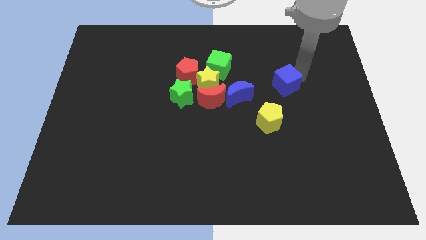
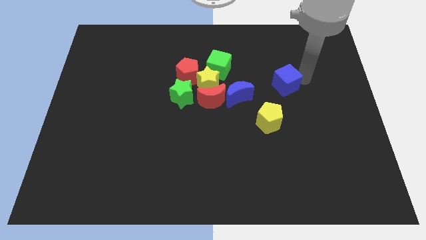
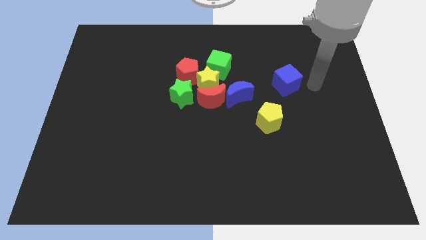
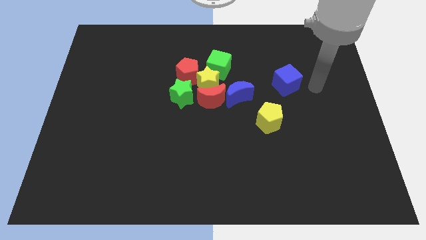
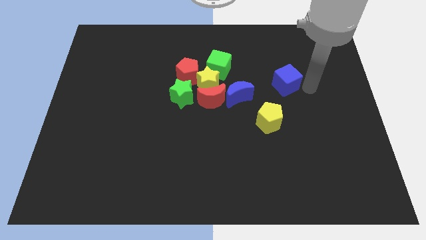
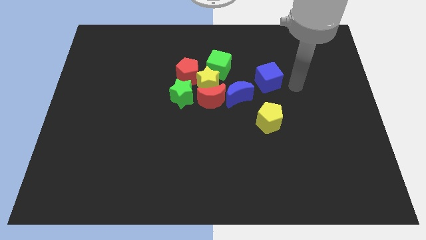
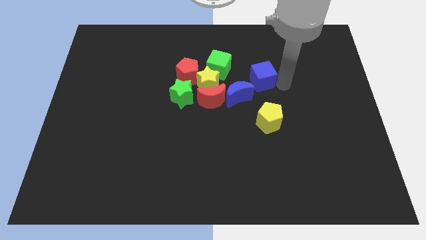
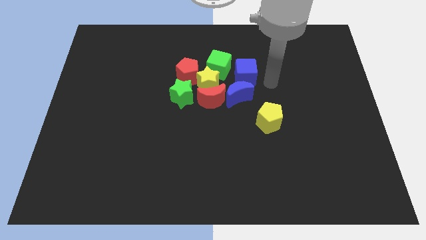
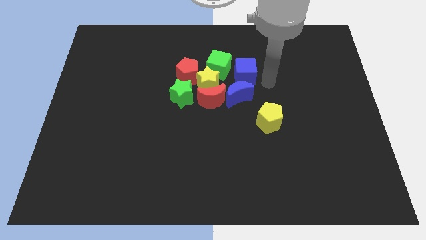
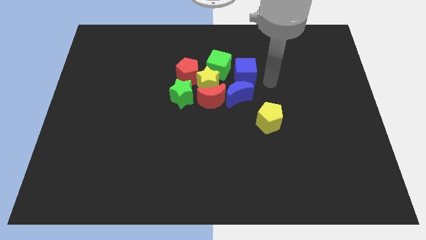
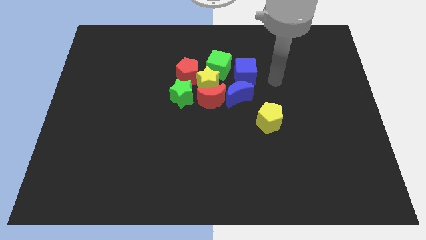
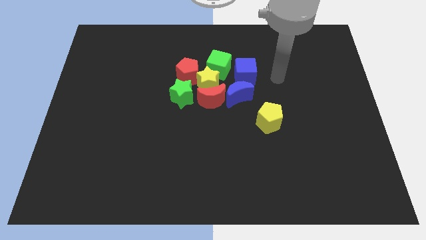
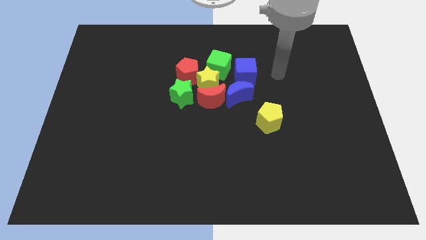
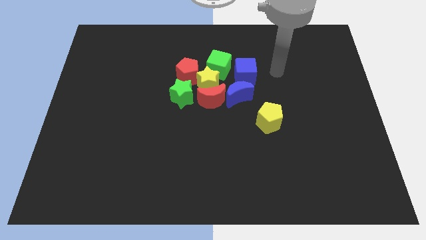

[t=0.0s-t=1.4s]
place the blue cube above the blue crescent

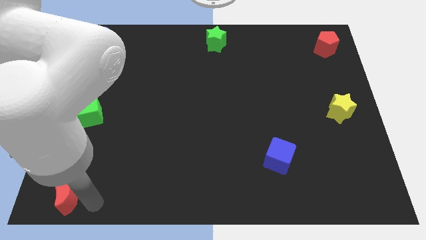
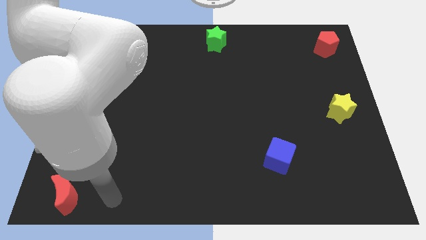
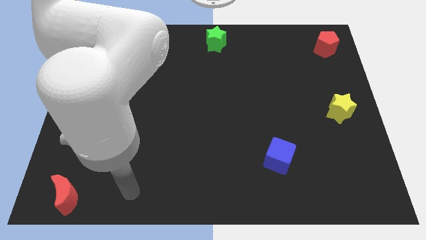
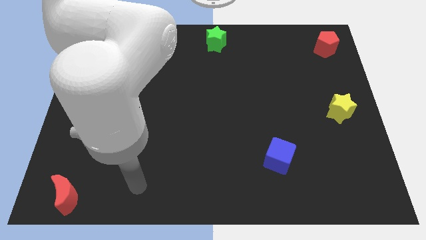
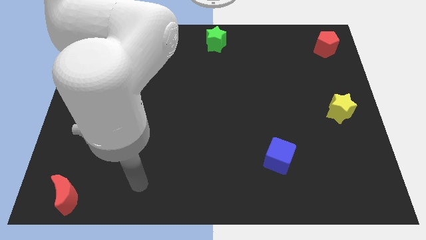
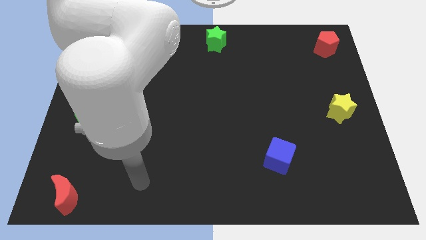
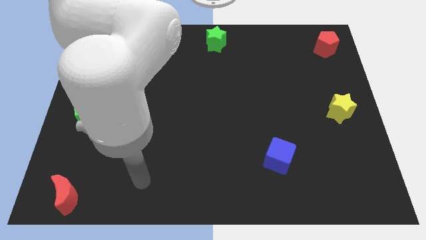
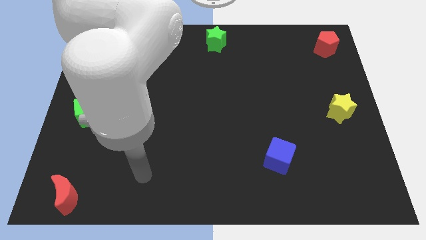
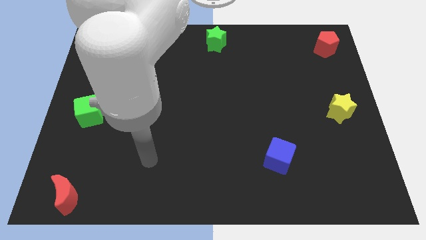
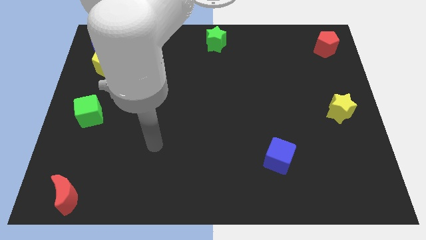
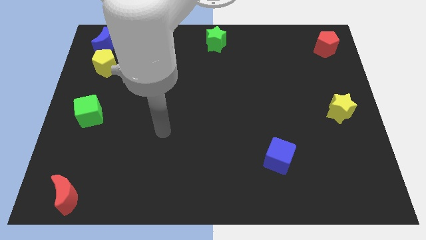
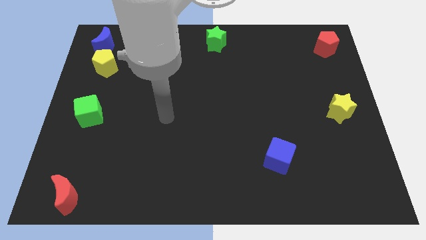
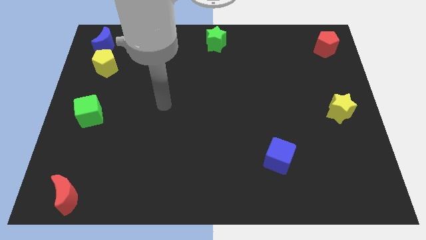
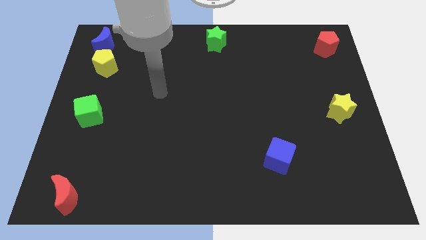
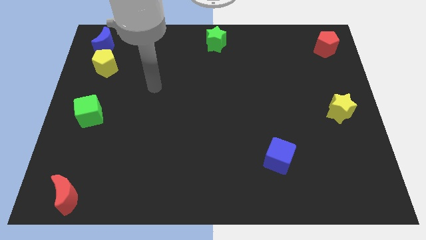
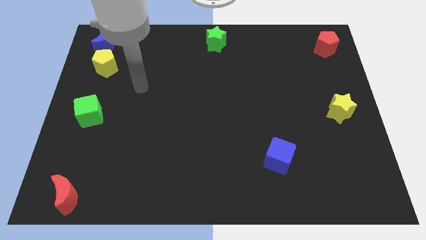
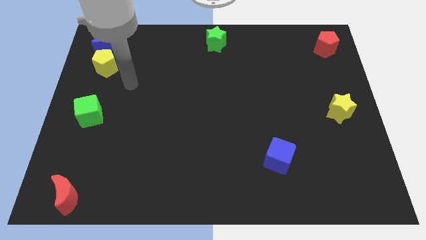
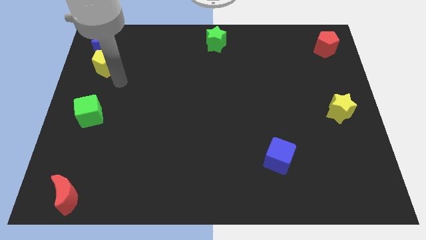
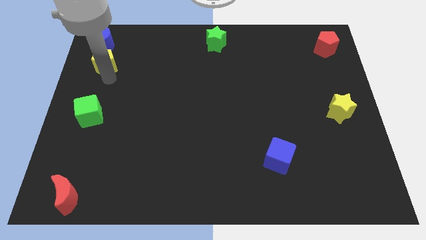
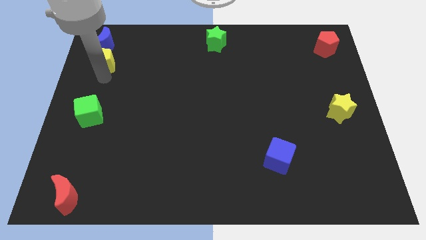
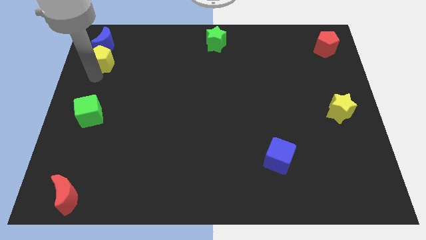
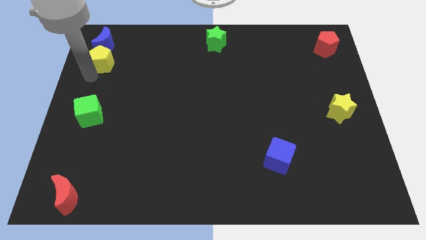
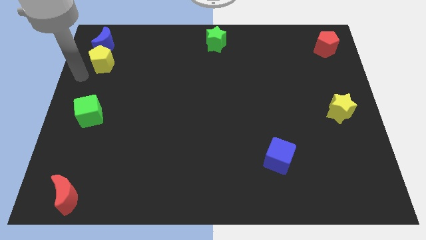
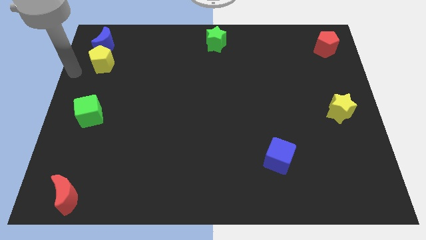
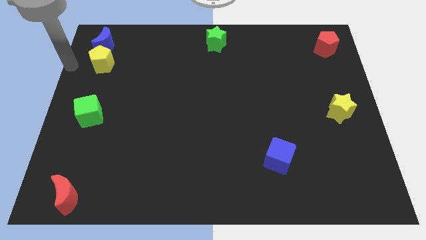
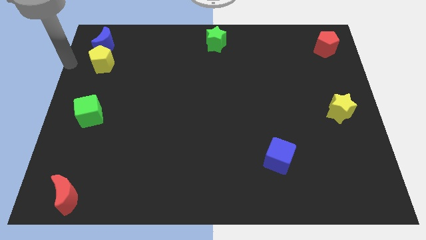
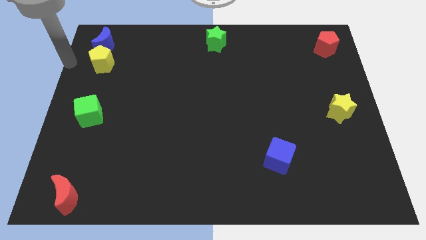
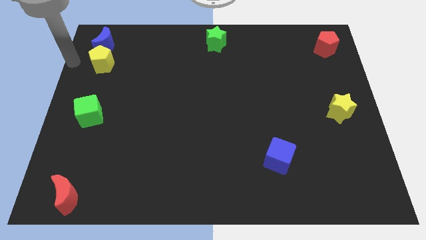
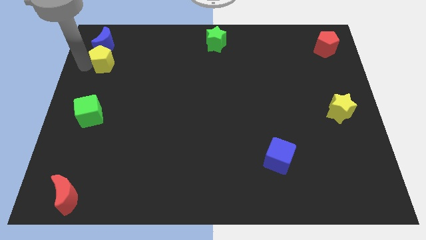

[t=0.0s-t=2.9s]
point your arm left to yellow pentagon

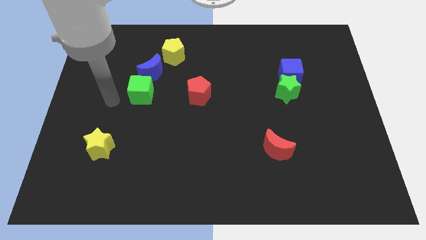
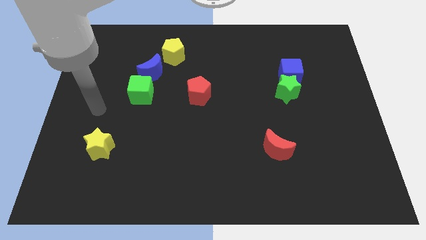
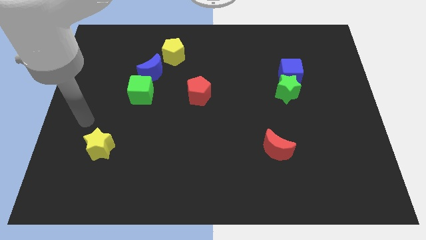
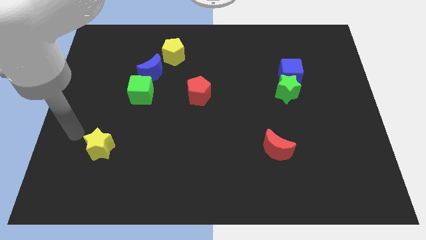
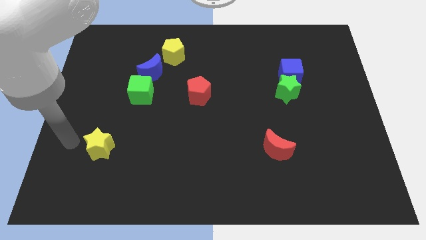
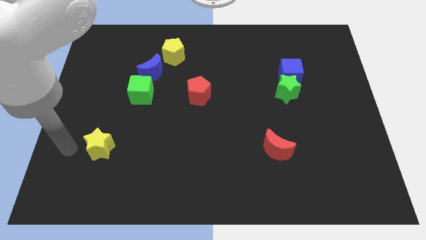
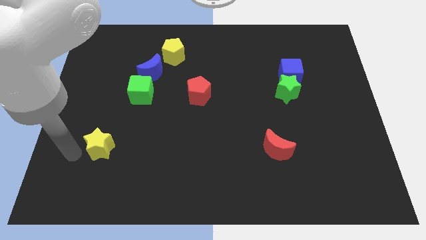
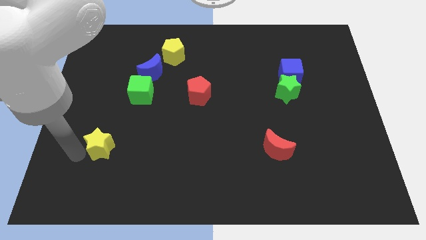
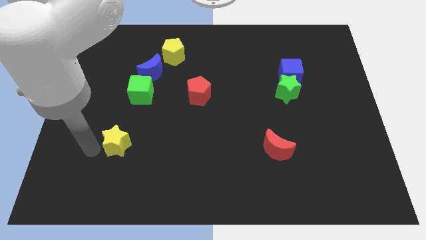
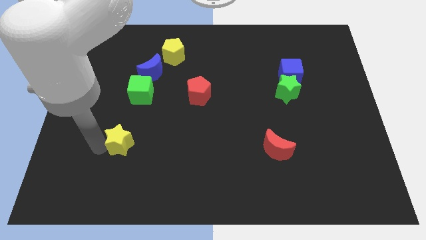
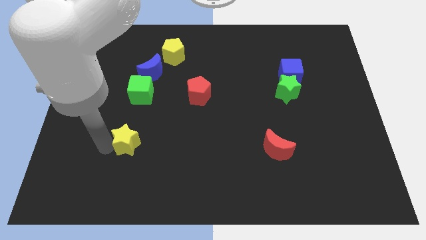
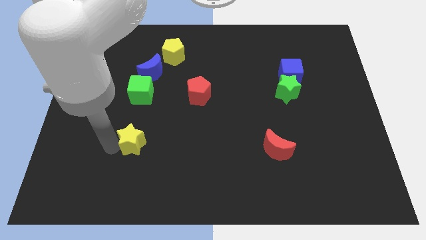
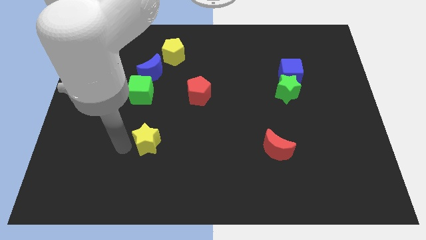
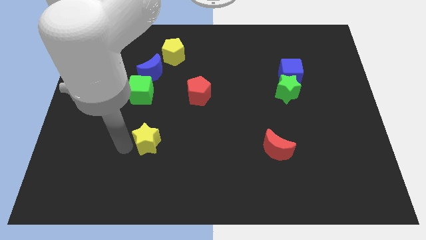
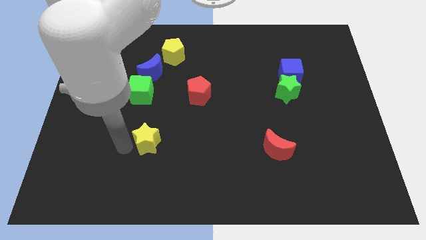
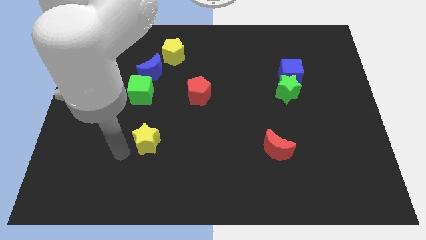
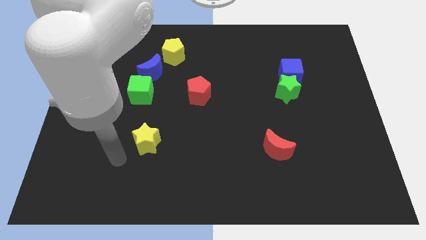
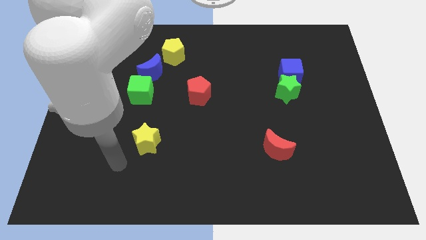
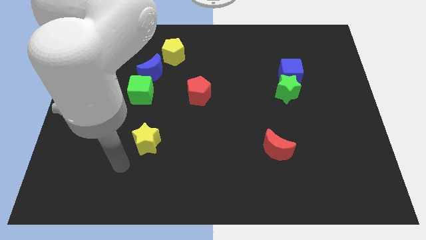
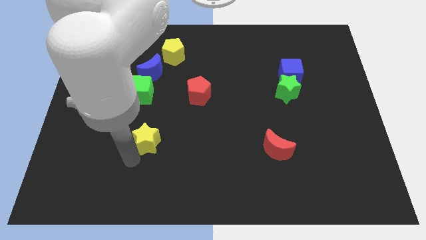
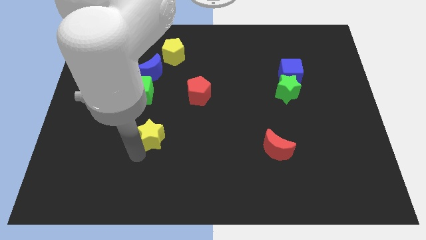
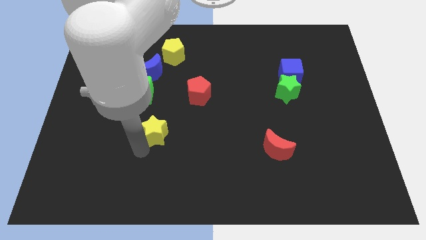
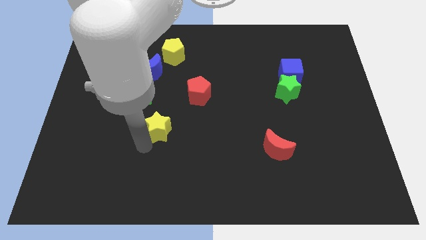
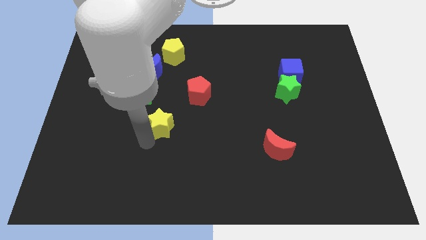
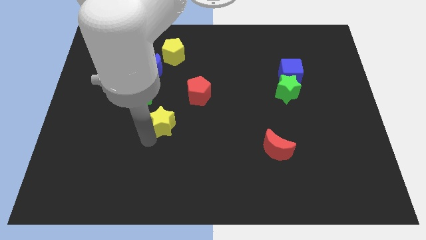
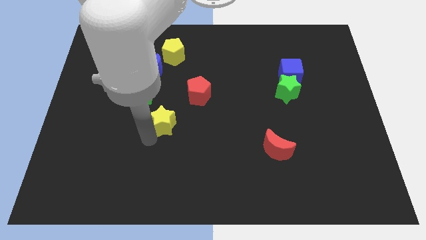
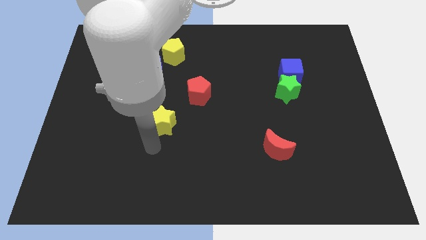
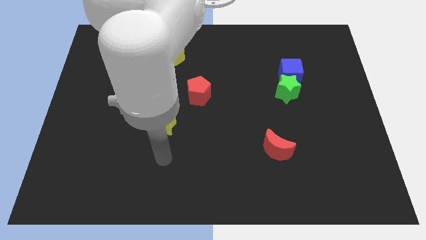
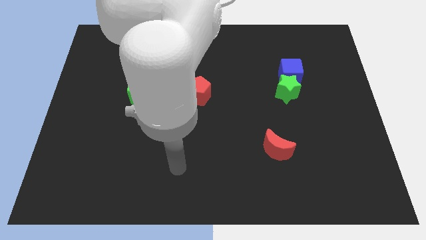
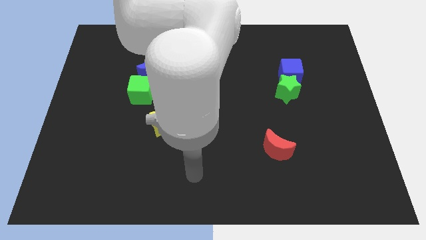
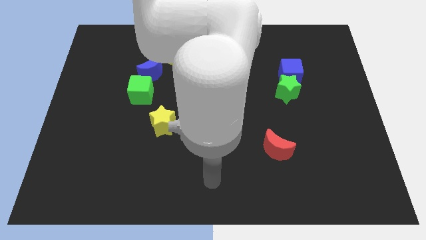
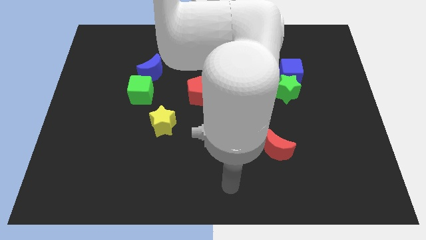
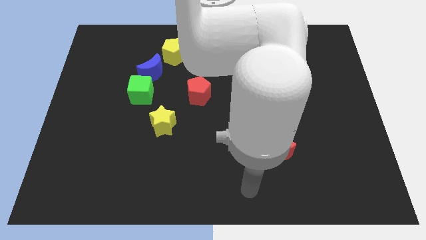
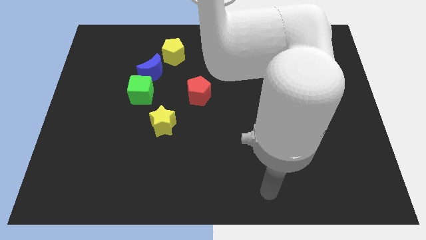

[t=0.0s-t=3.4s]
push the yellow star to the bottom right side of the green cube

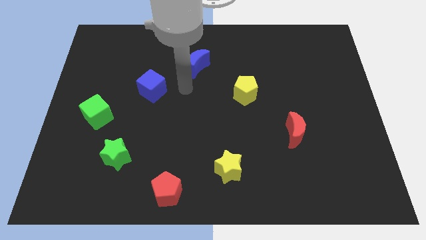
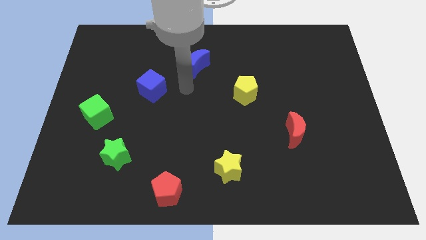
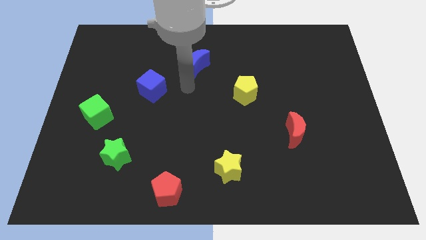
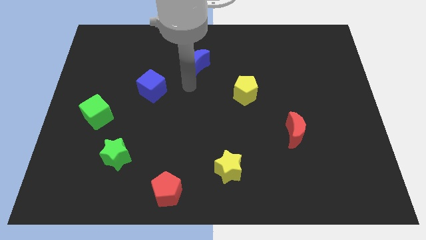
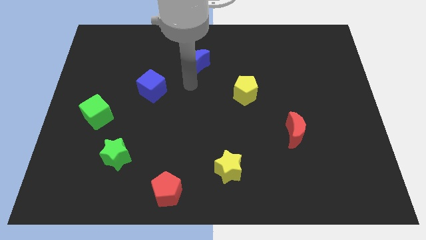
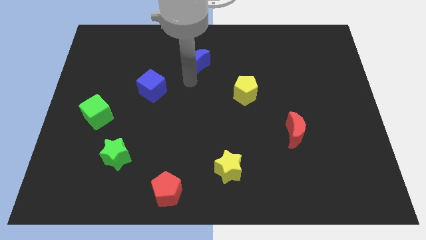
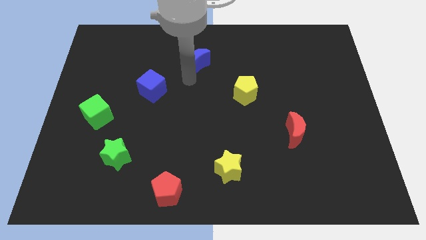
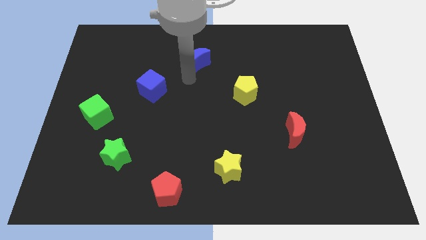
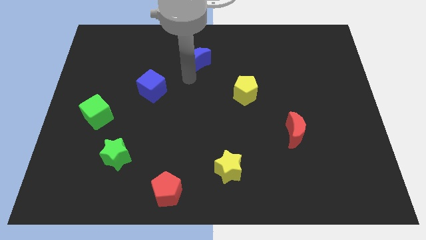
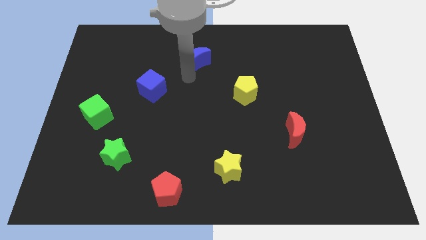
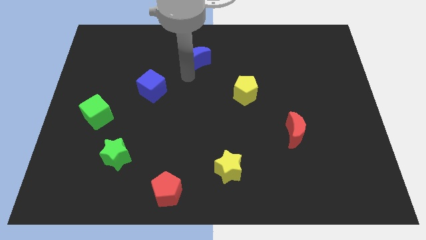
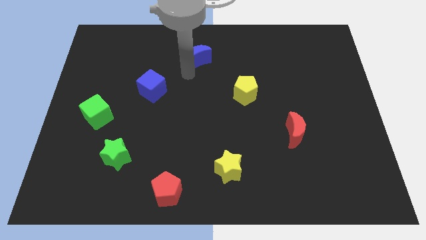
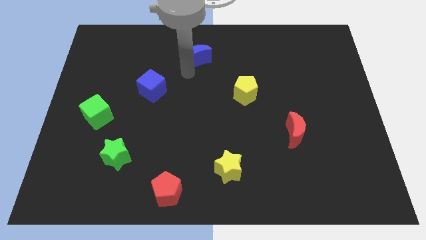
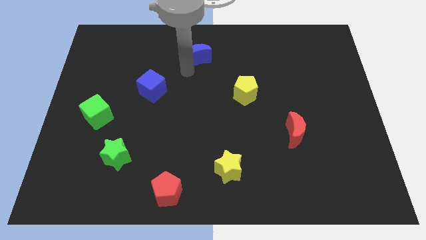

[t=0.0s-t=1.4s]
slightly move the blue crescent to the top of the board
